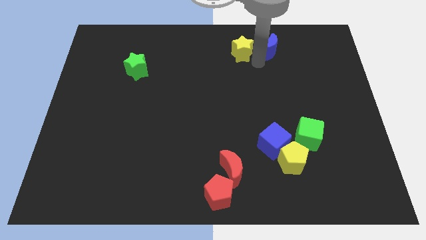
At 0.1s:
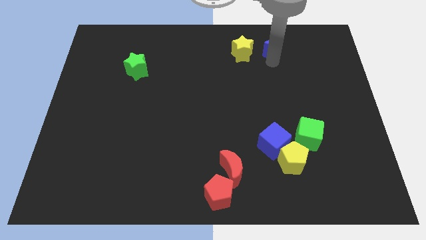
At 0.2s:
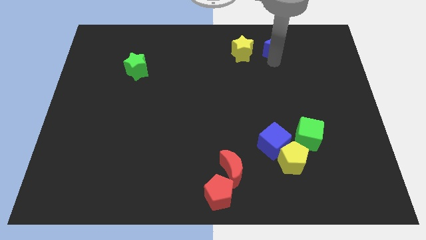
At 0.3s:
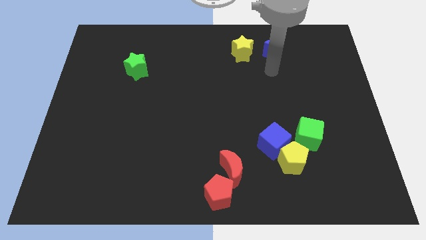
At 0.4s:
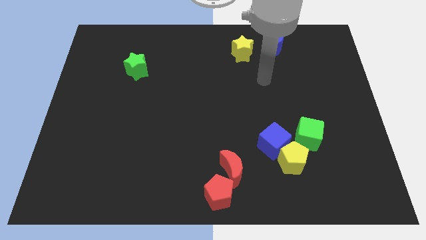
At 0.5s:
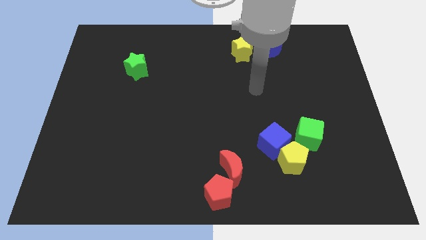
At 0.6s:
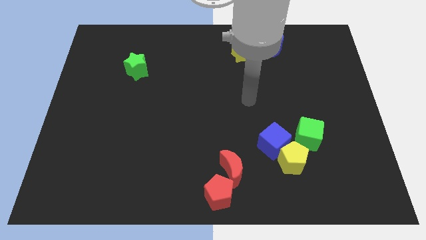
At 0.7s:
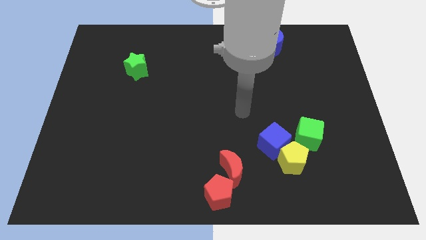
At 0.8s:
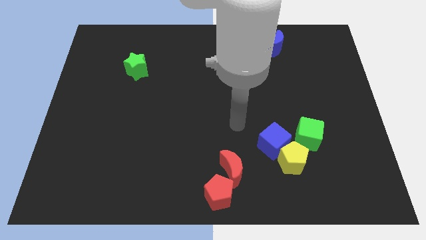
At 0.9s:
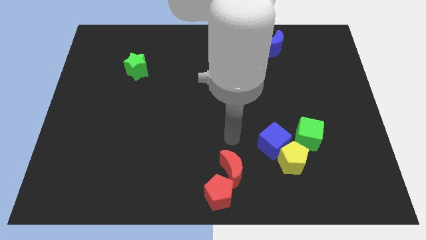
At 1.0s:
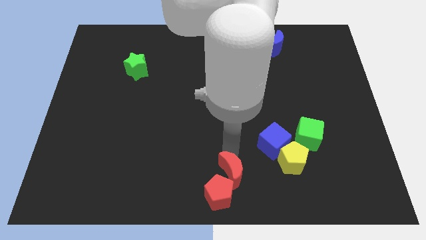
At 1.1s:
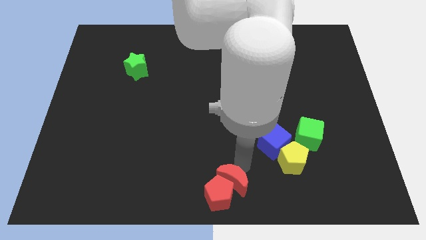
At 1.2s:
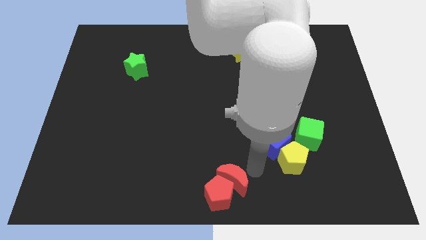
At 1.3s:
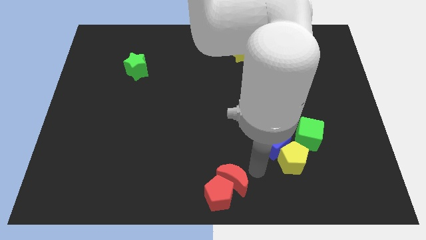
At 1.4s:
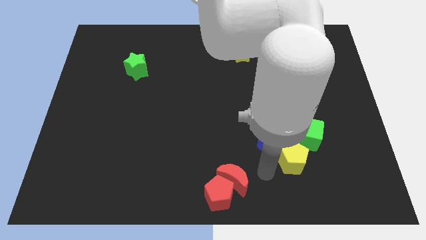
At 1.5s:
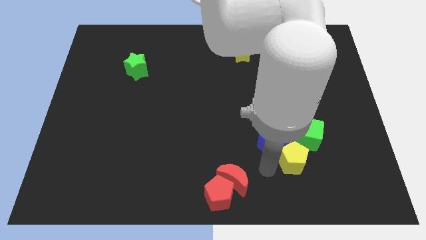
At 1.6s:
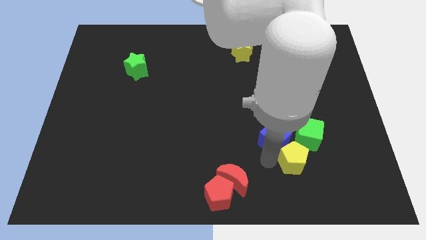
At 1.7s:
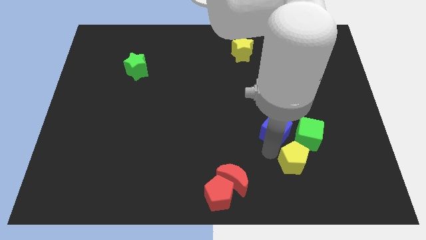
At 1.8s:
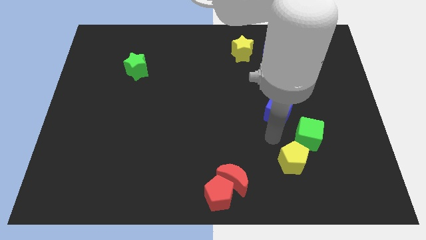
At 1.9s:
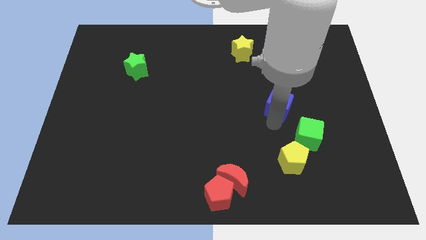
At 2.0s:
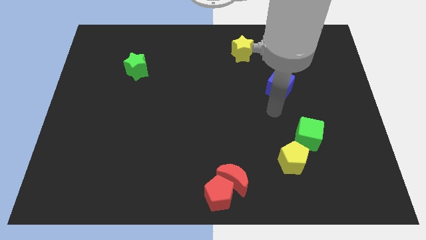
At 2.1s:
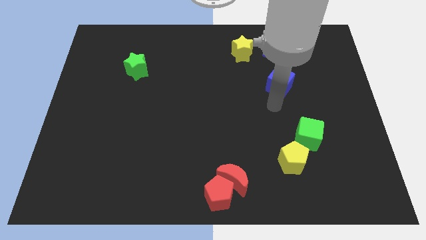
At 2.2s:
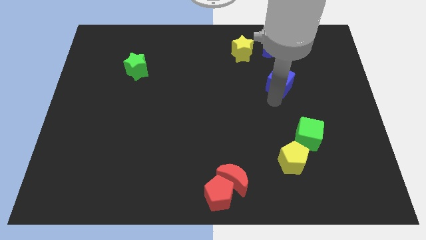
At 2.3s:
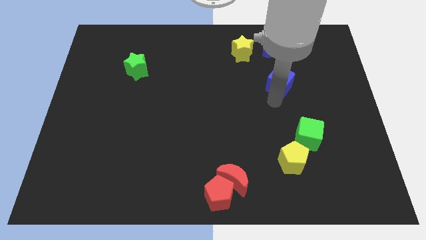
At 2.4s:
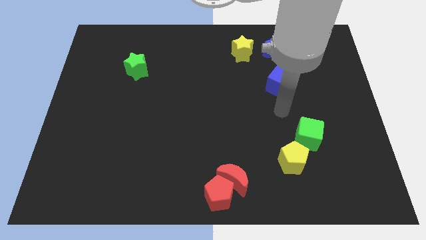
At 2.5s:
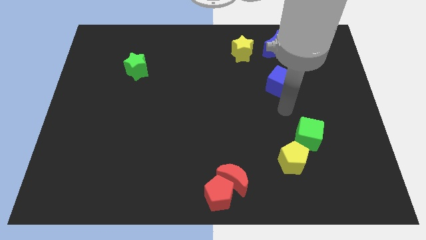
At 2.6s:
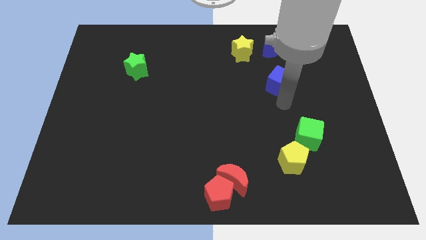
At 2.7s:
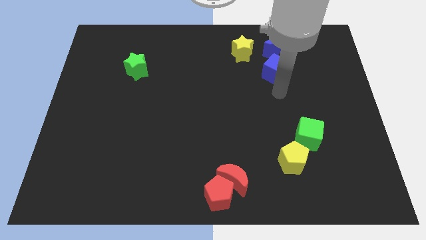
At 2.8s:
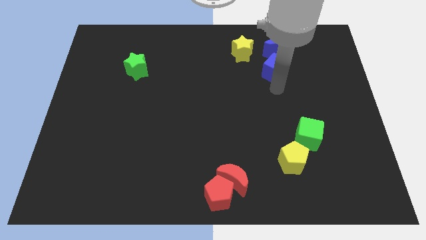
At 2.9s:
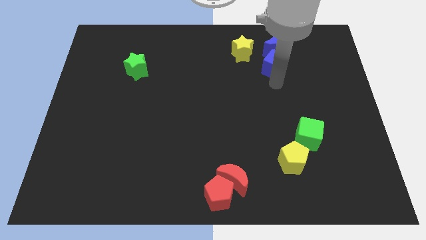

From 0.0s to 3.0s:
place the blue cube down to the blue moon

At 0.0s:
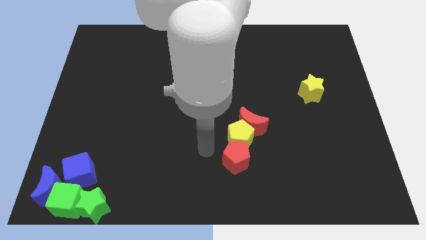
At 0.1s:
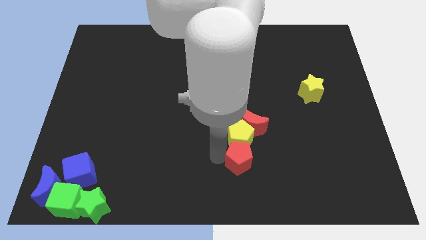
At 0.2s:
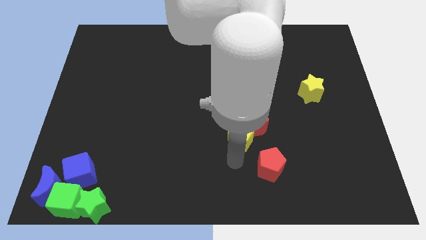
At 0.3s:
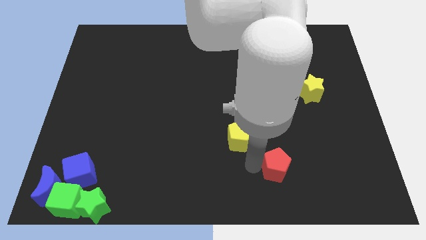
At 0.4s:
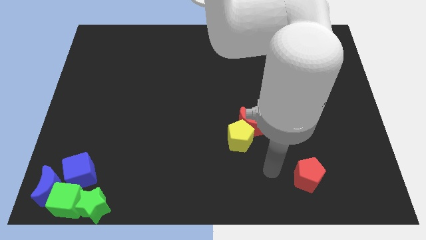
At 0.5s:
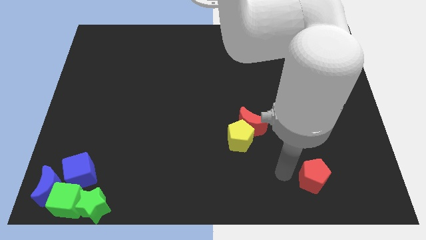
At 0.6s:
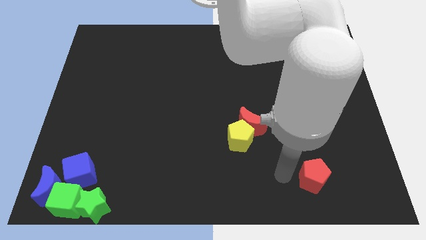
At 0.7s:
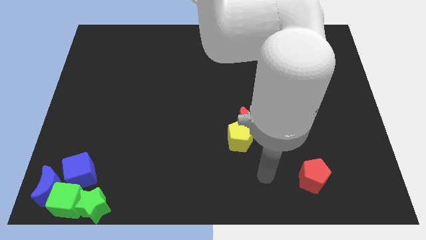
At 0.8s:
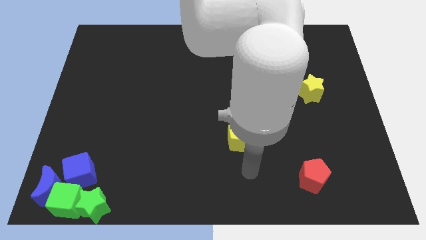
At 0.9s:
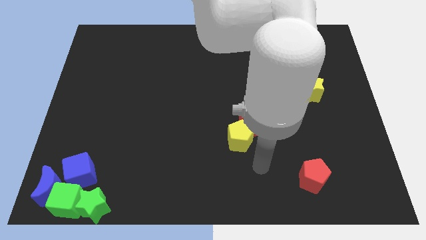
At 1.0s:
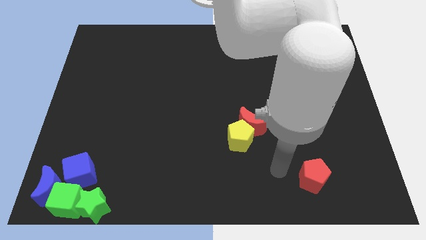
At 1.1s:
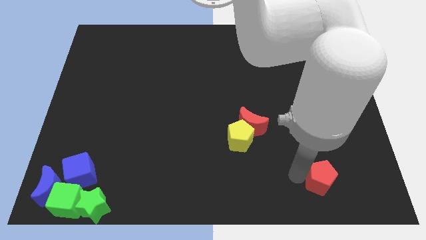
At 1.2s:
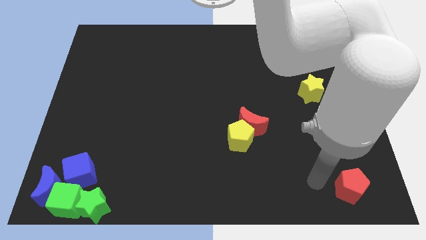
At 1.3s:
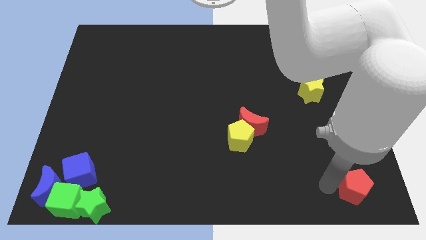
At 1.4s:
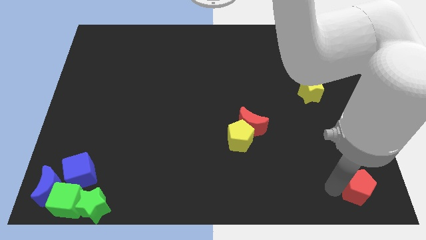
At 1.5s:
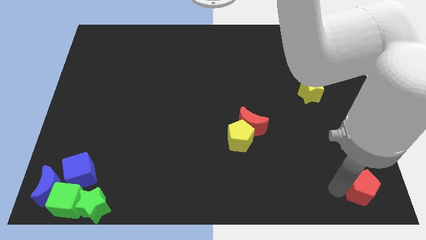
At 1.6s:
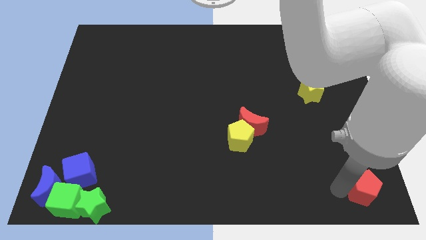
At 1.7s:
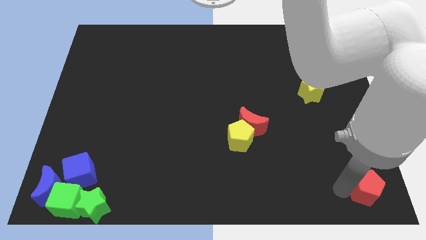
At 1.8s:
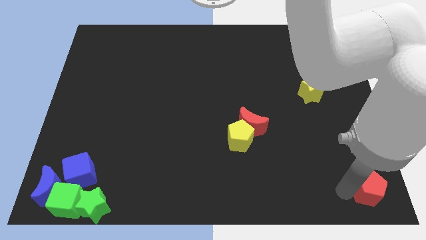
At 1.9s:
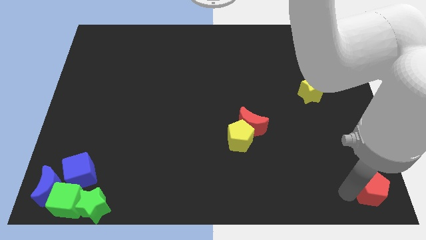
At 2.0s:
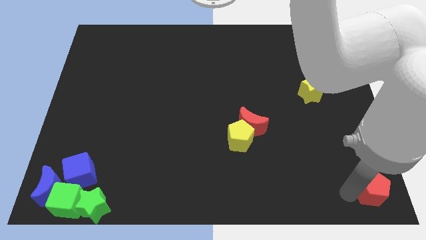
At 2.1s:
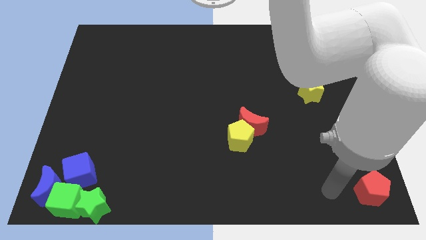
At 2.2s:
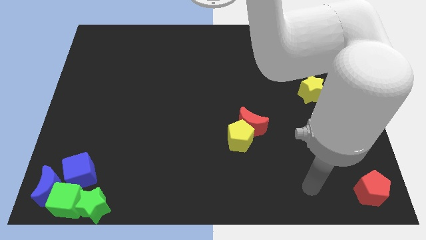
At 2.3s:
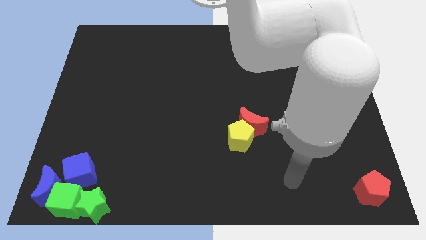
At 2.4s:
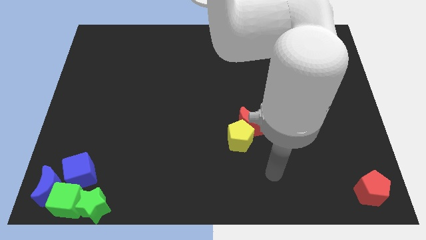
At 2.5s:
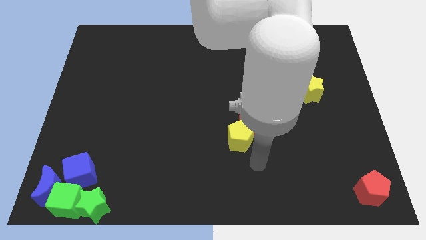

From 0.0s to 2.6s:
move the red pentagon towards the bottom right side of the board

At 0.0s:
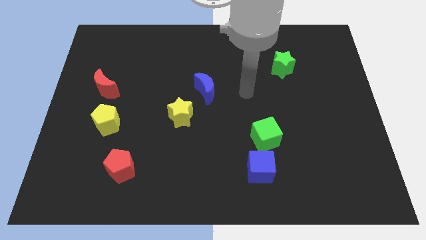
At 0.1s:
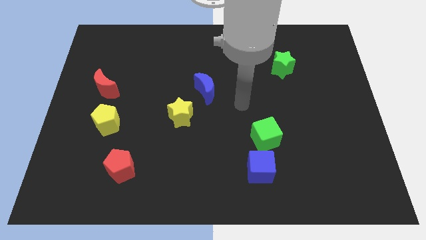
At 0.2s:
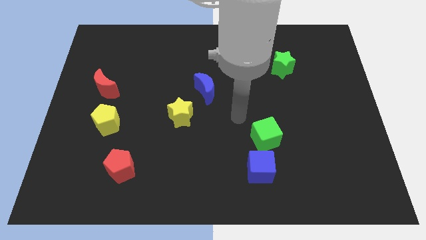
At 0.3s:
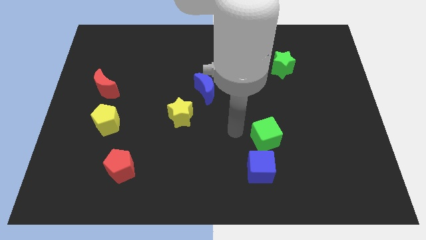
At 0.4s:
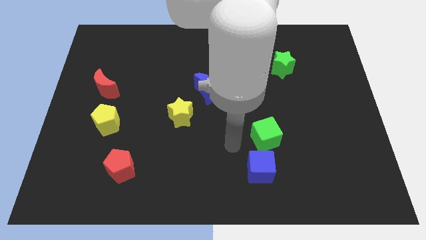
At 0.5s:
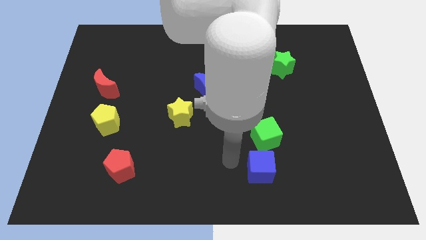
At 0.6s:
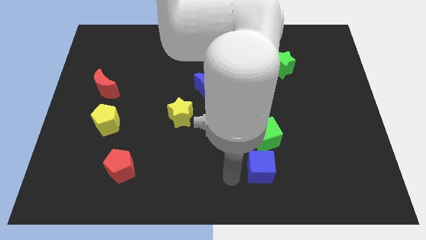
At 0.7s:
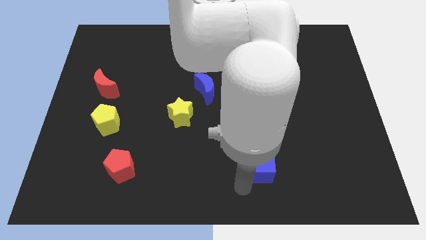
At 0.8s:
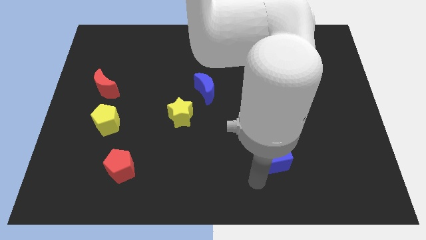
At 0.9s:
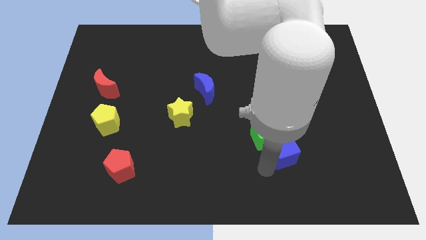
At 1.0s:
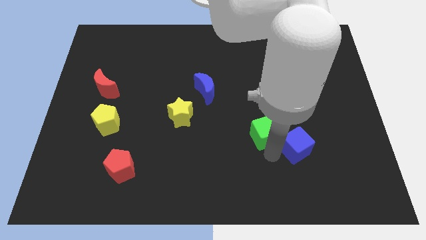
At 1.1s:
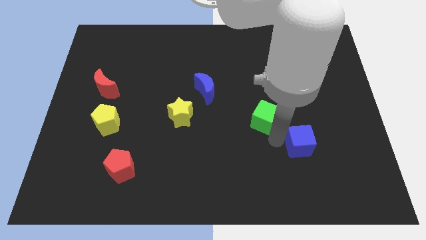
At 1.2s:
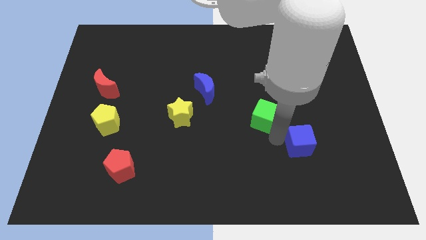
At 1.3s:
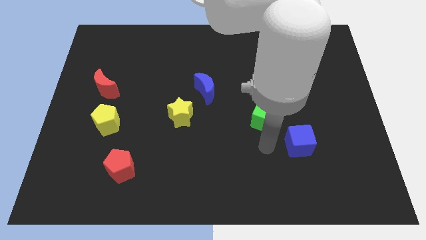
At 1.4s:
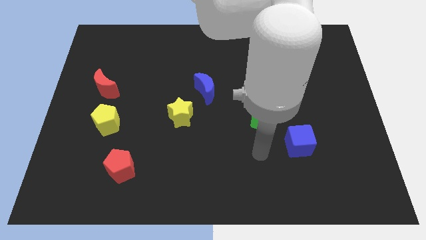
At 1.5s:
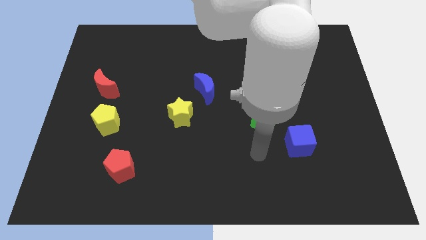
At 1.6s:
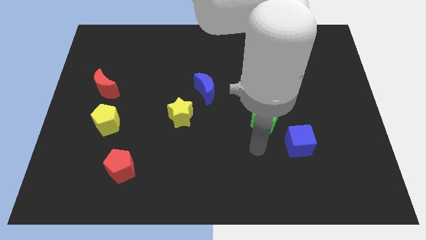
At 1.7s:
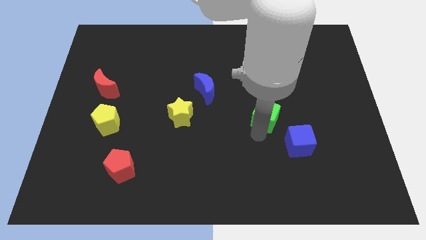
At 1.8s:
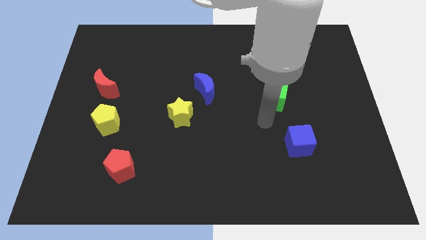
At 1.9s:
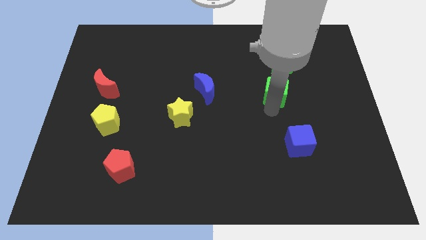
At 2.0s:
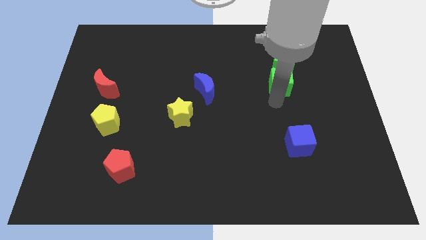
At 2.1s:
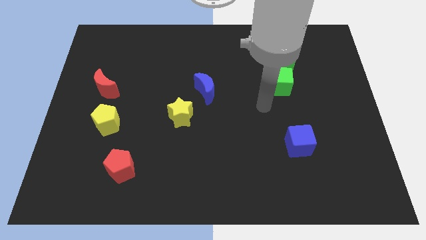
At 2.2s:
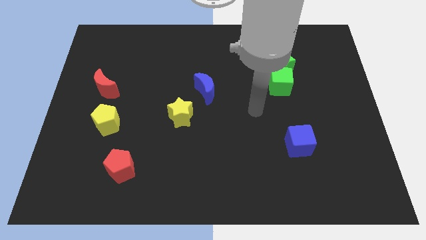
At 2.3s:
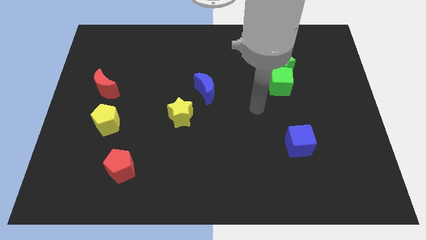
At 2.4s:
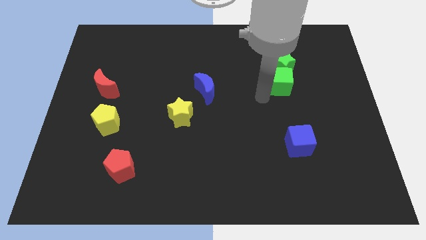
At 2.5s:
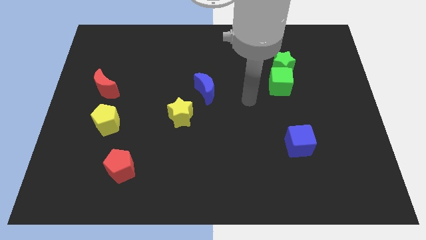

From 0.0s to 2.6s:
separate the green cube from blue cube

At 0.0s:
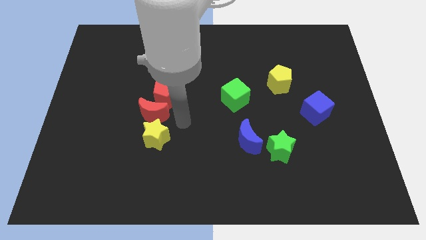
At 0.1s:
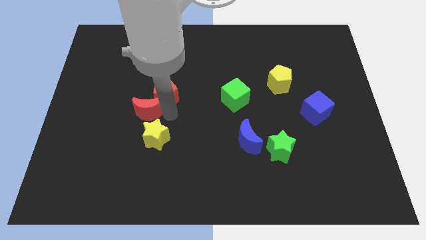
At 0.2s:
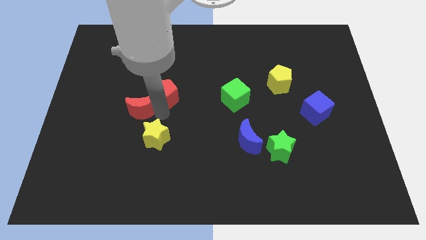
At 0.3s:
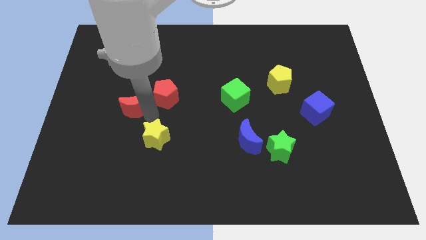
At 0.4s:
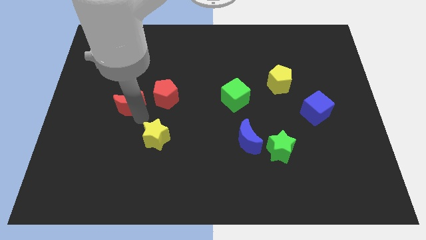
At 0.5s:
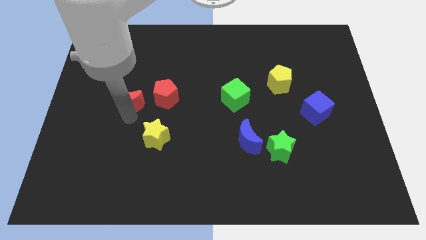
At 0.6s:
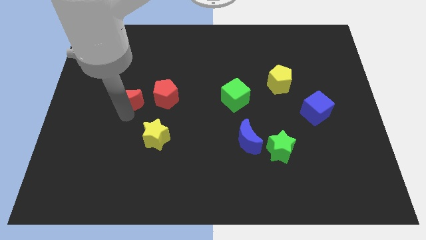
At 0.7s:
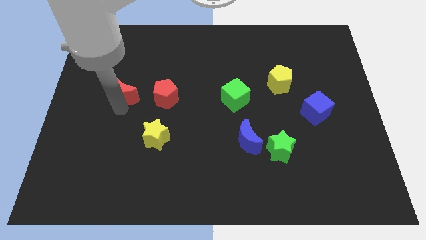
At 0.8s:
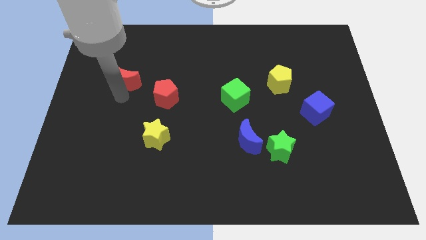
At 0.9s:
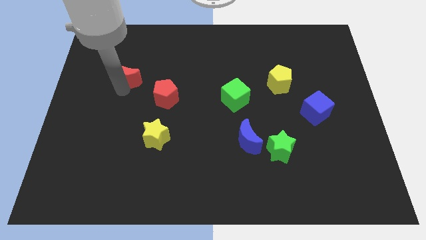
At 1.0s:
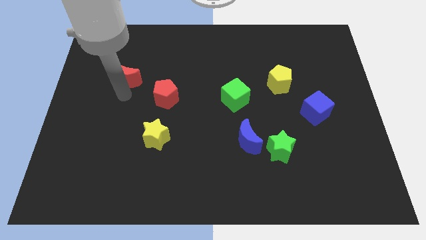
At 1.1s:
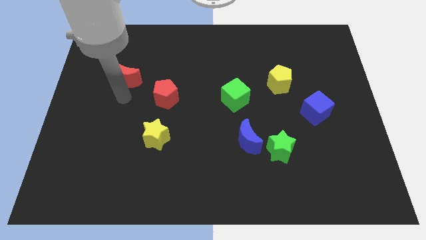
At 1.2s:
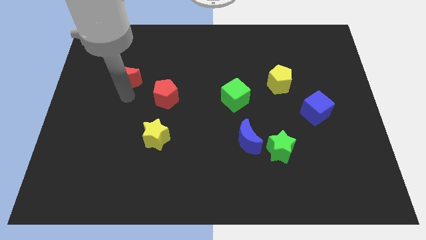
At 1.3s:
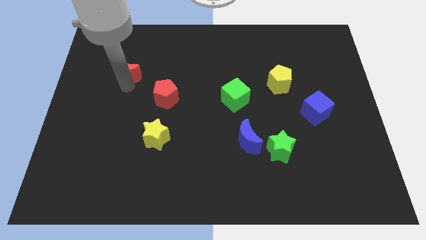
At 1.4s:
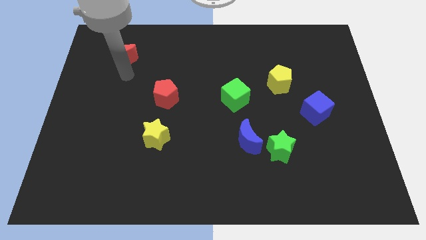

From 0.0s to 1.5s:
separate the red crescent from the yellow star and the red pentagon
